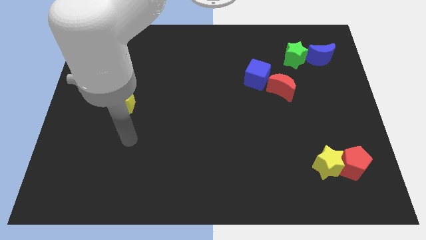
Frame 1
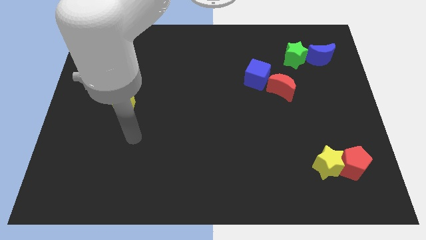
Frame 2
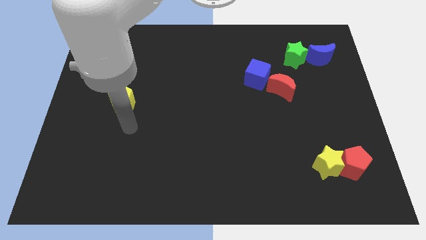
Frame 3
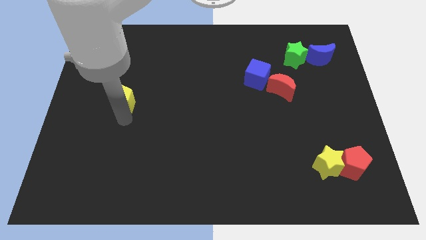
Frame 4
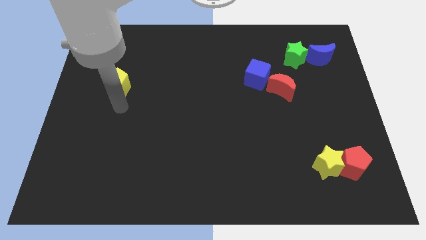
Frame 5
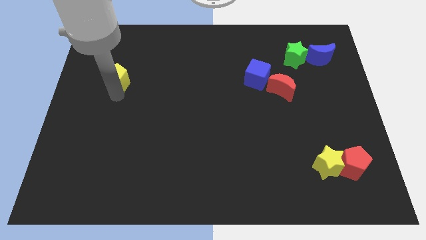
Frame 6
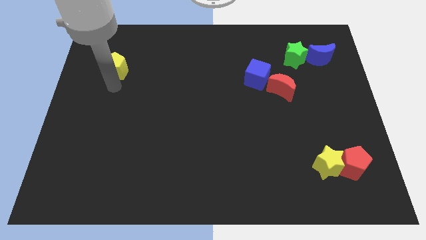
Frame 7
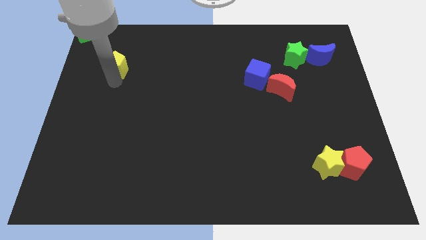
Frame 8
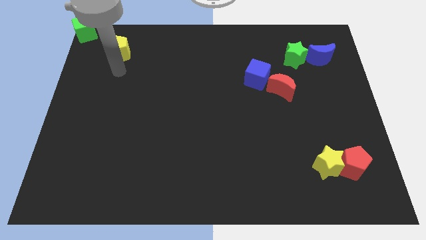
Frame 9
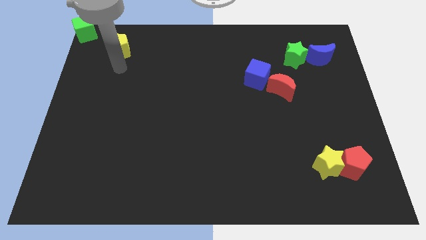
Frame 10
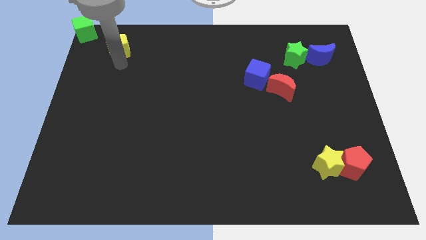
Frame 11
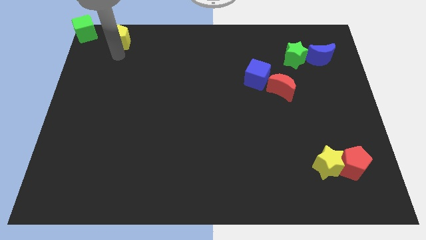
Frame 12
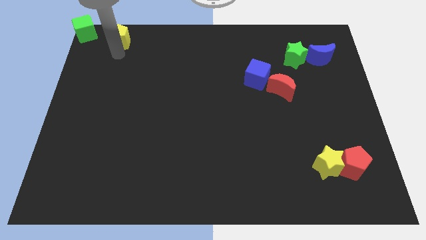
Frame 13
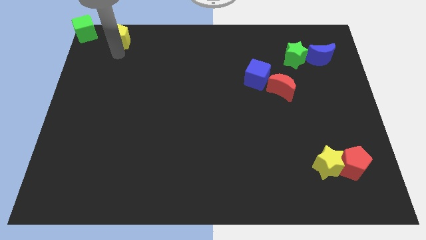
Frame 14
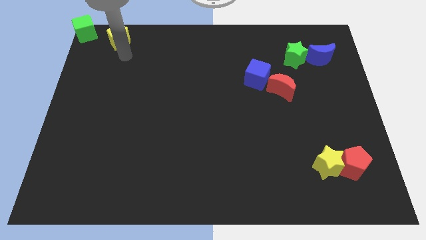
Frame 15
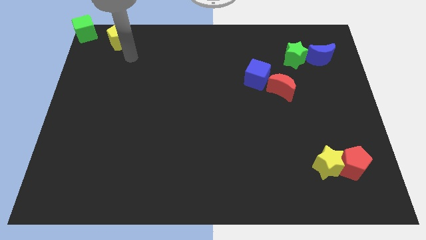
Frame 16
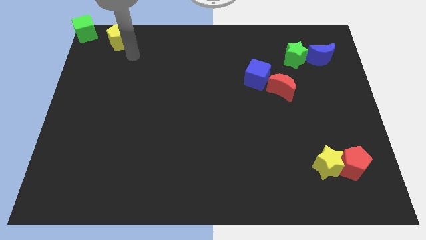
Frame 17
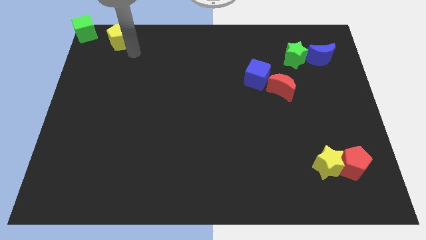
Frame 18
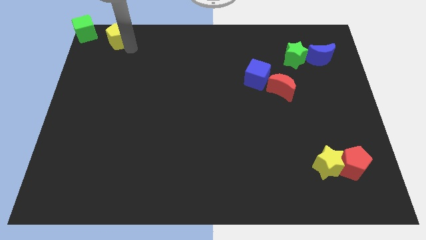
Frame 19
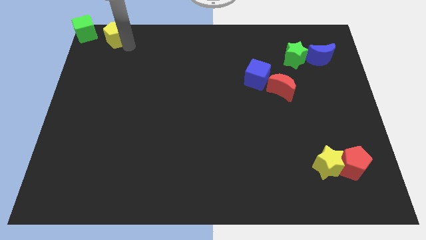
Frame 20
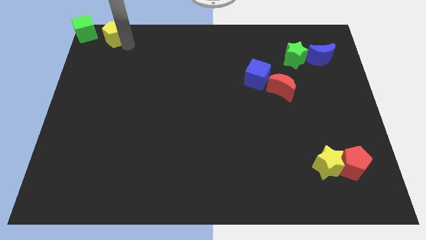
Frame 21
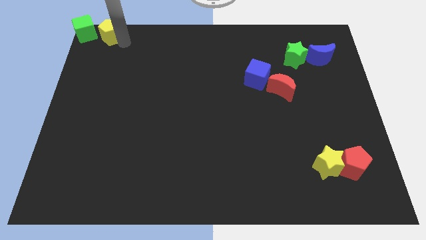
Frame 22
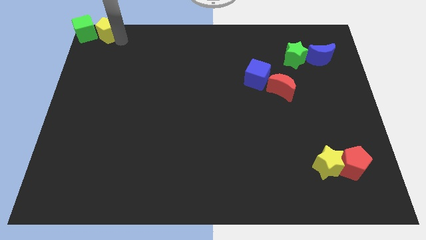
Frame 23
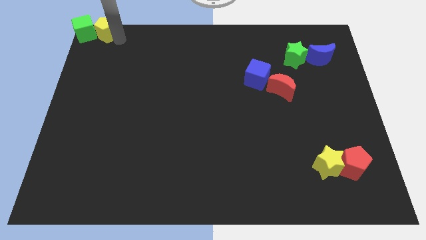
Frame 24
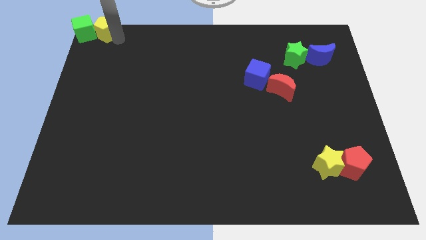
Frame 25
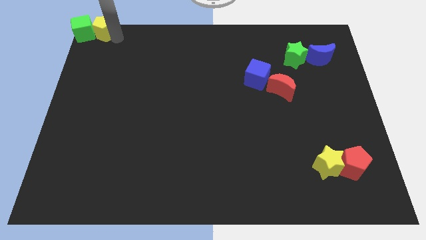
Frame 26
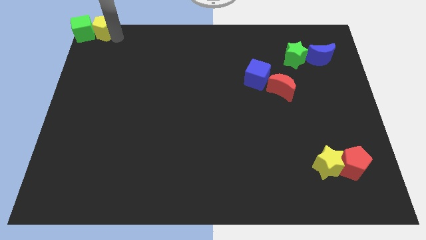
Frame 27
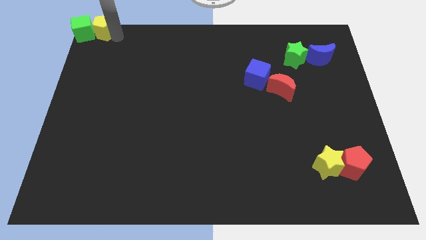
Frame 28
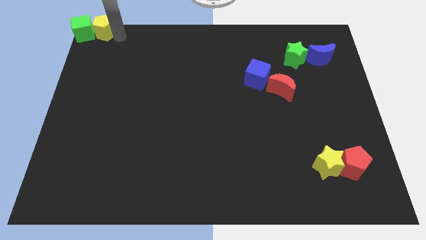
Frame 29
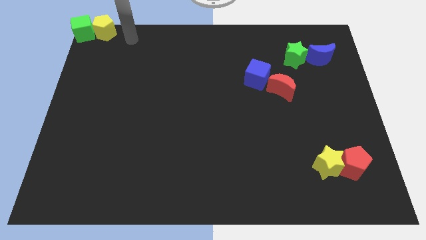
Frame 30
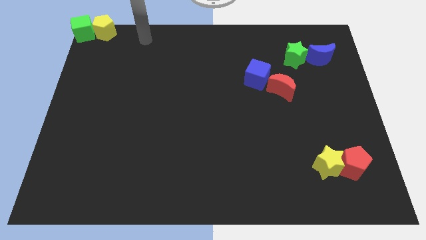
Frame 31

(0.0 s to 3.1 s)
move yellow pentagon to the right side of the green cube

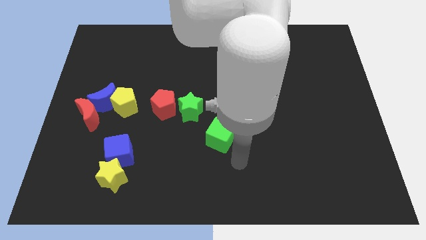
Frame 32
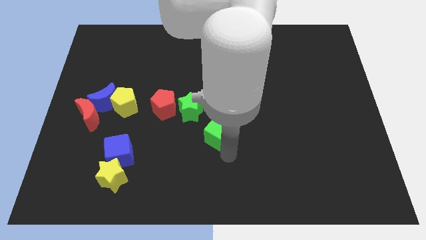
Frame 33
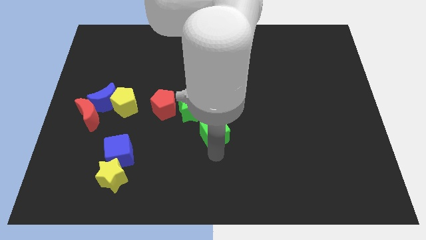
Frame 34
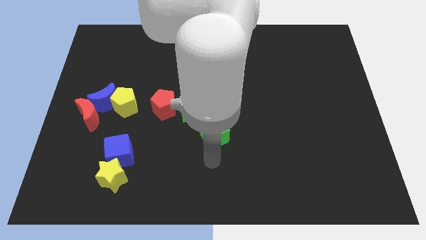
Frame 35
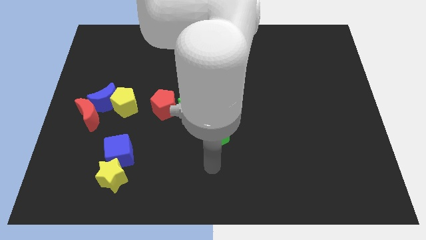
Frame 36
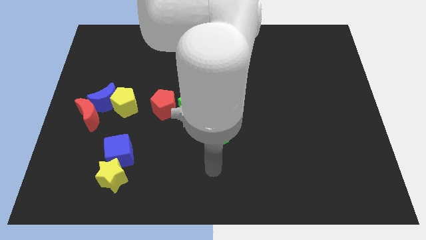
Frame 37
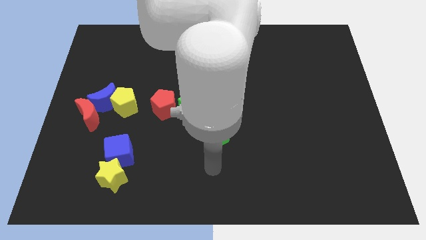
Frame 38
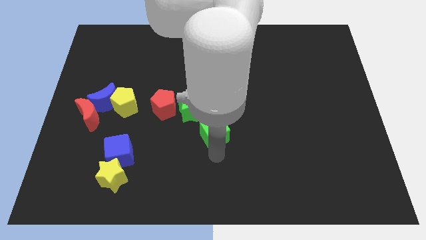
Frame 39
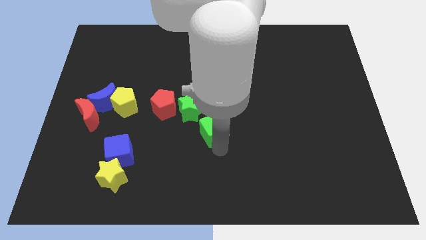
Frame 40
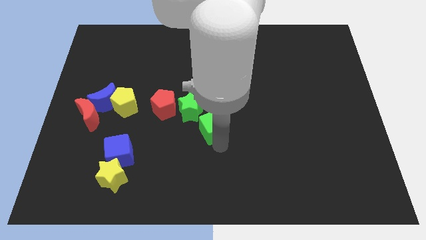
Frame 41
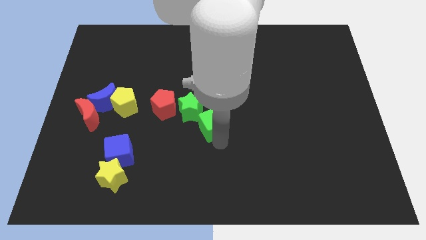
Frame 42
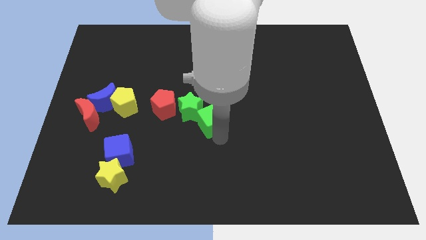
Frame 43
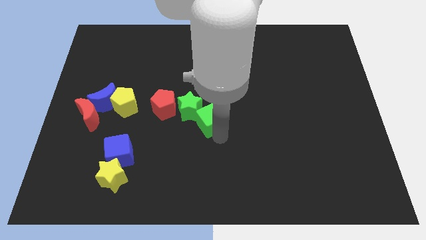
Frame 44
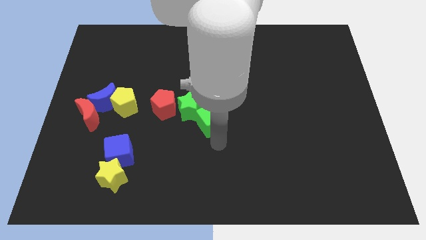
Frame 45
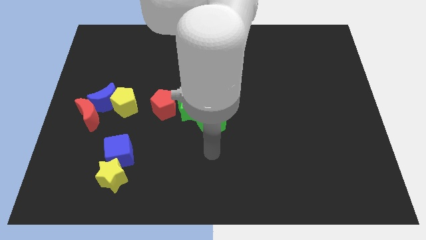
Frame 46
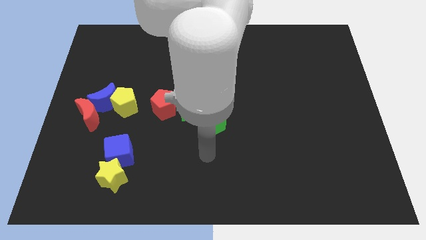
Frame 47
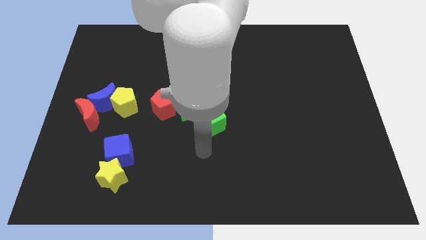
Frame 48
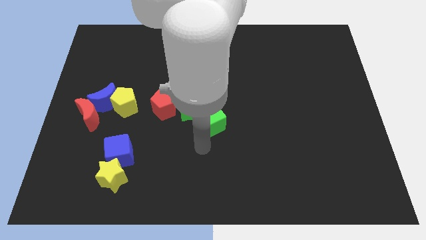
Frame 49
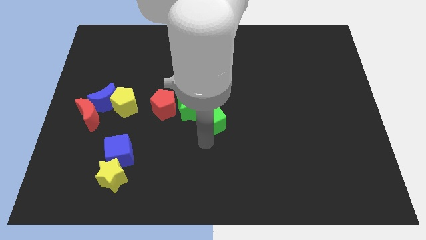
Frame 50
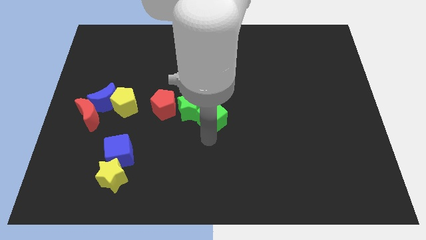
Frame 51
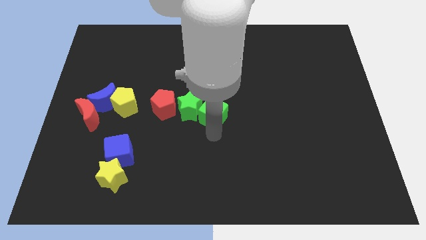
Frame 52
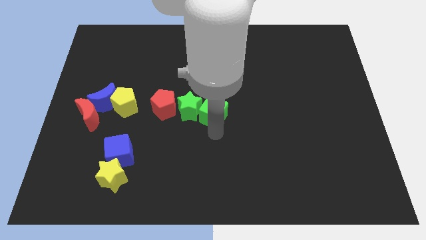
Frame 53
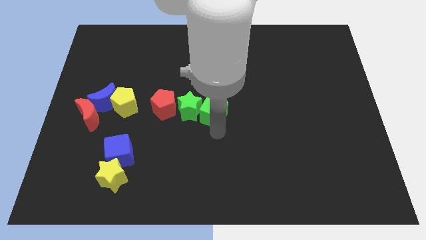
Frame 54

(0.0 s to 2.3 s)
move the green cube next to the green star

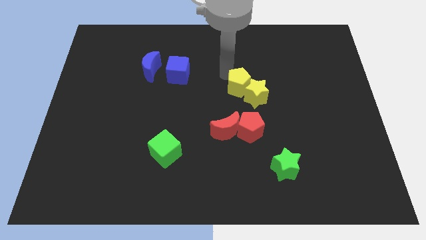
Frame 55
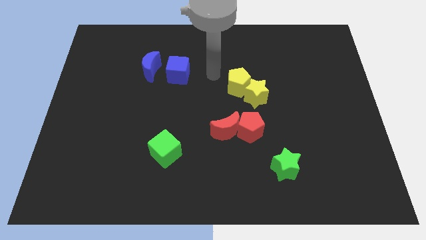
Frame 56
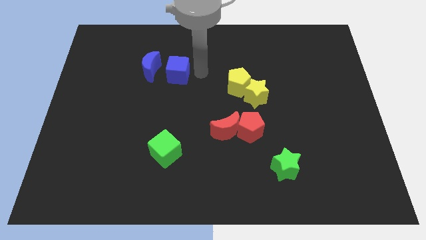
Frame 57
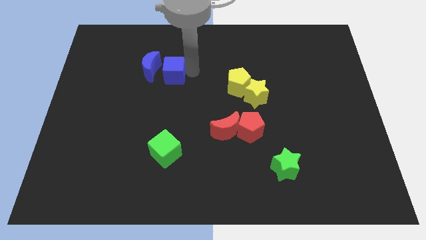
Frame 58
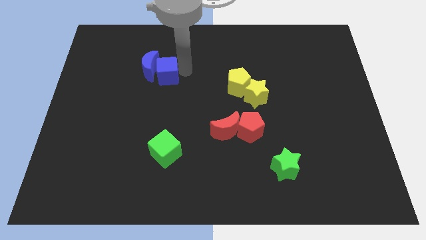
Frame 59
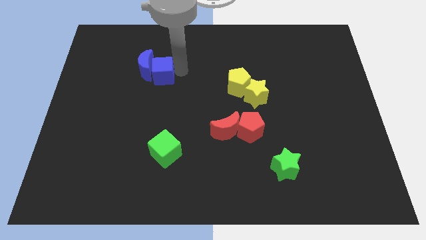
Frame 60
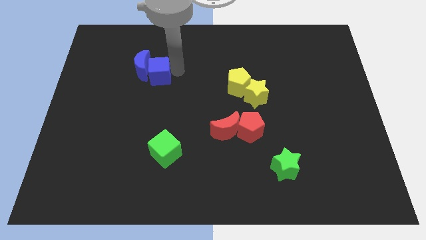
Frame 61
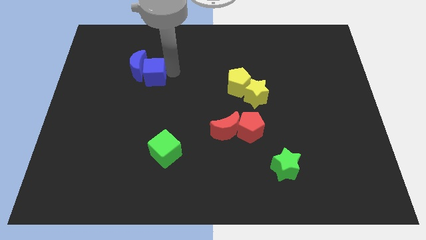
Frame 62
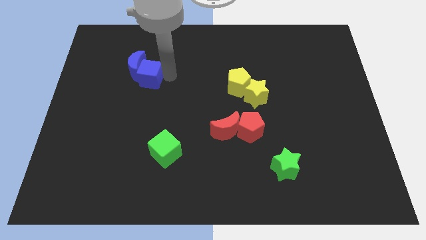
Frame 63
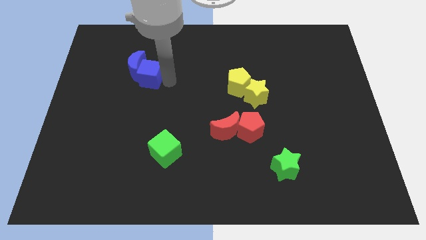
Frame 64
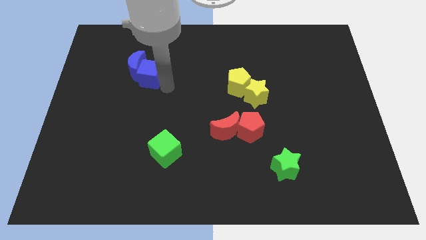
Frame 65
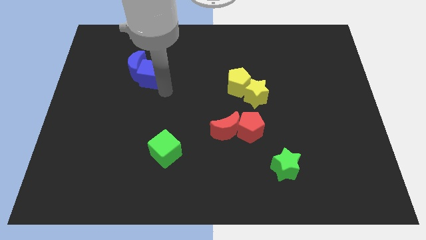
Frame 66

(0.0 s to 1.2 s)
push the blue blocks towards the left side of the board

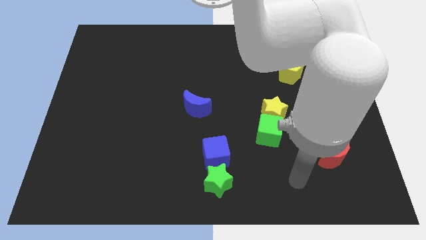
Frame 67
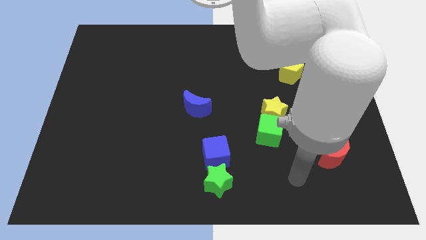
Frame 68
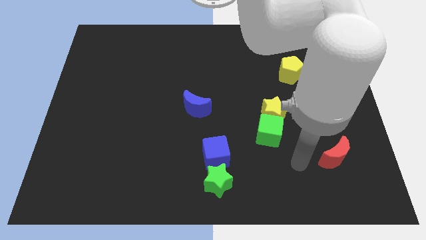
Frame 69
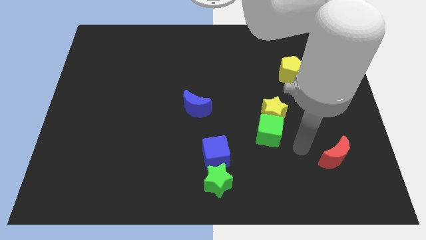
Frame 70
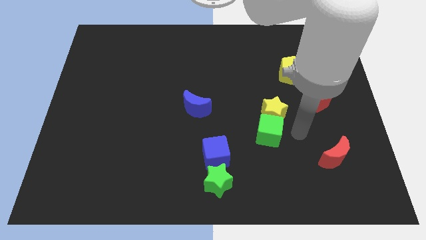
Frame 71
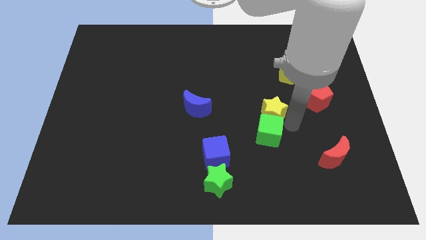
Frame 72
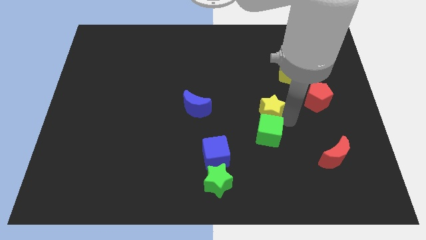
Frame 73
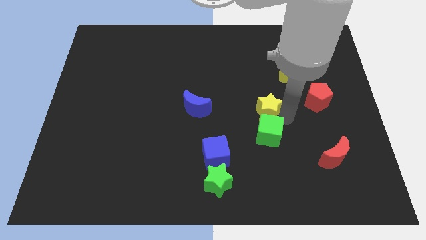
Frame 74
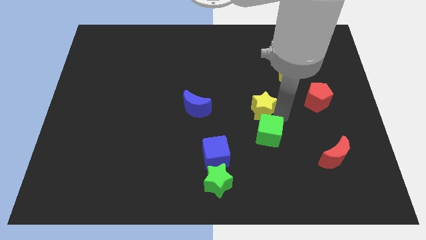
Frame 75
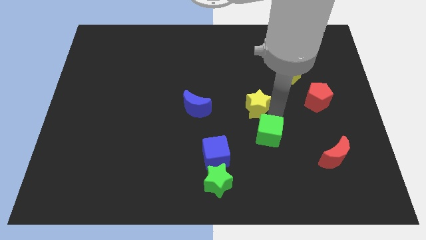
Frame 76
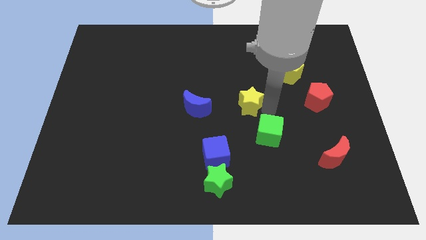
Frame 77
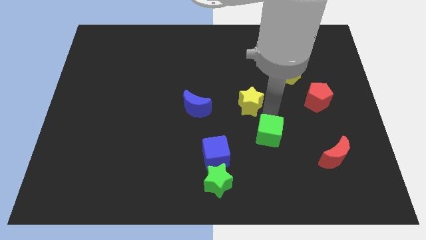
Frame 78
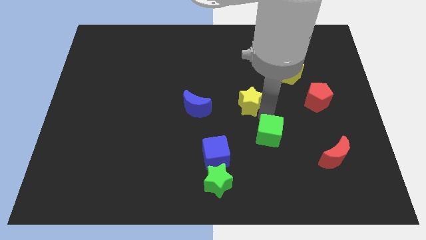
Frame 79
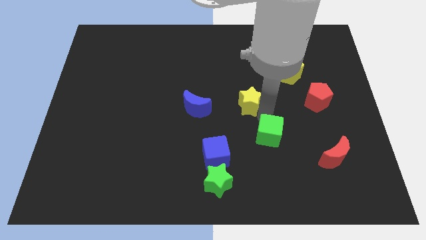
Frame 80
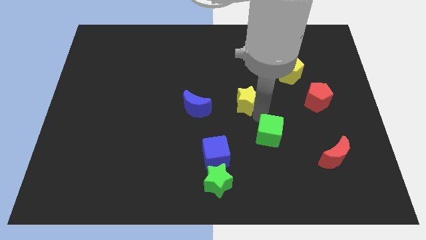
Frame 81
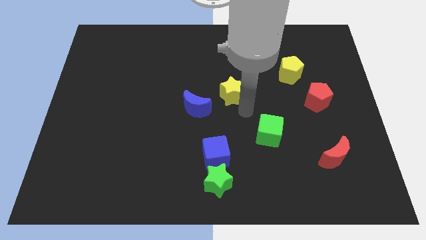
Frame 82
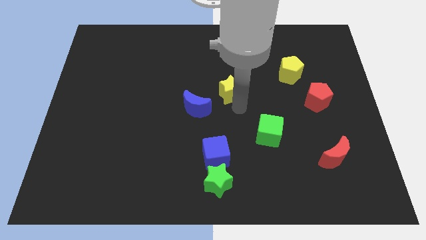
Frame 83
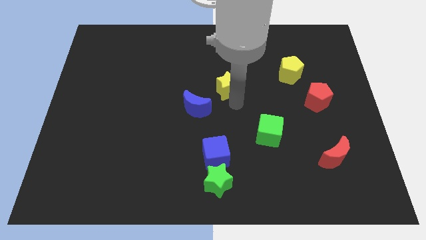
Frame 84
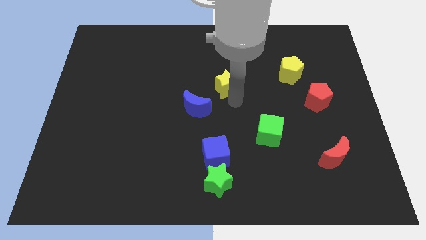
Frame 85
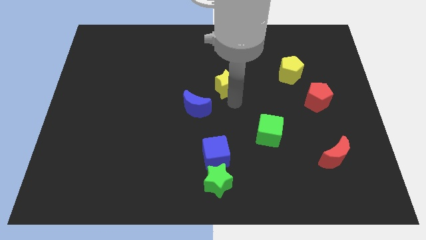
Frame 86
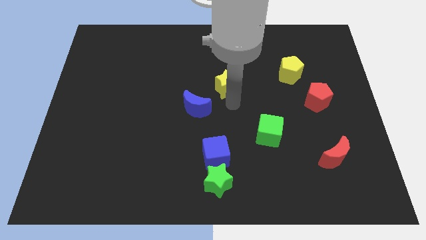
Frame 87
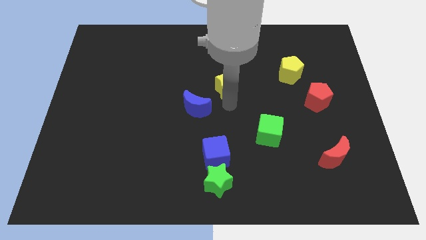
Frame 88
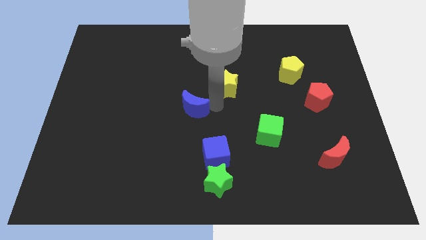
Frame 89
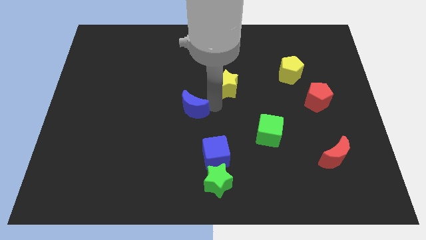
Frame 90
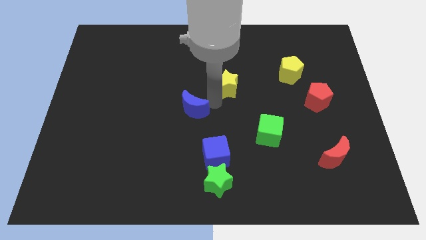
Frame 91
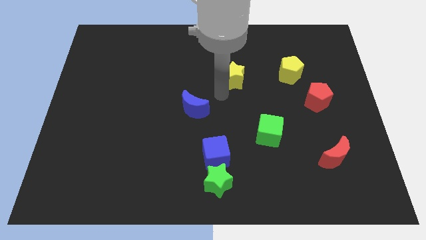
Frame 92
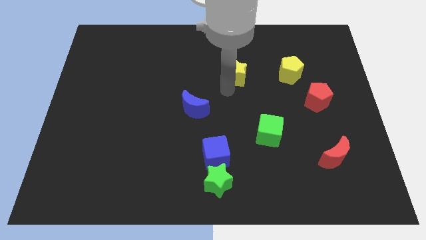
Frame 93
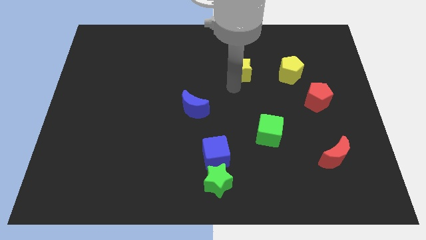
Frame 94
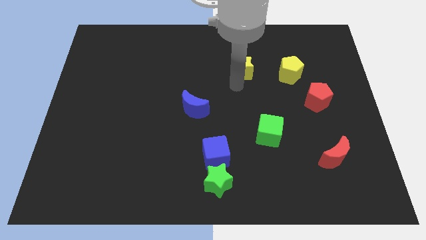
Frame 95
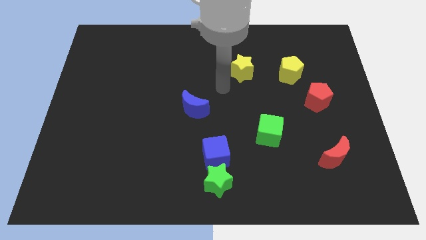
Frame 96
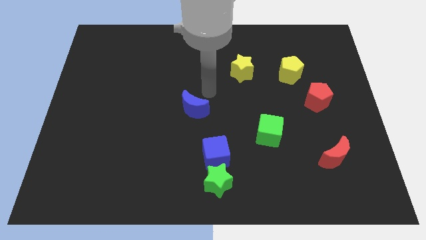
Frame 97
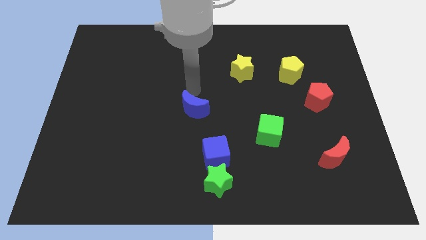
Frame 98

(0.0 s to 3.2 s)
place the yellow star to the left side of the yellow pentagon
